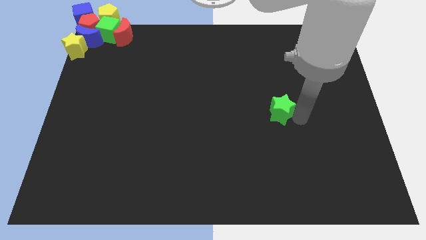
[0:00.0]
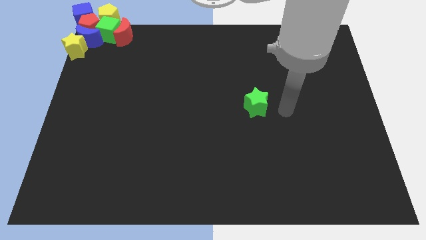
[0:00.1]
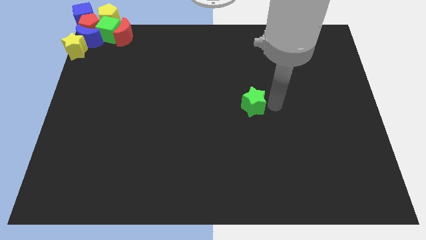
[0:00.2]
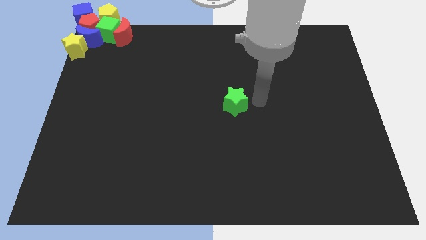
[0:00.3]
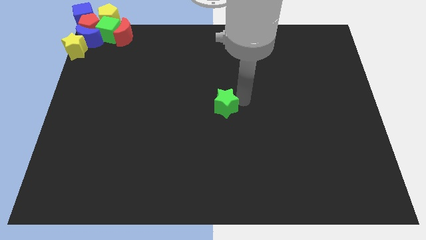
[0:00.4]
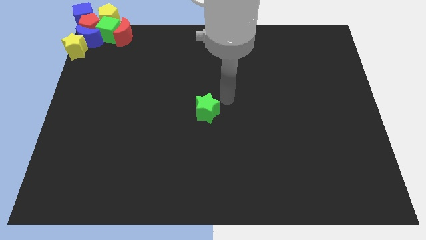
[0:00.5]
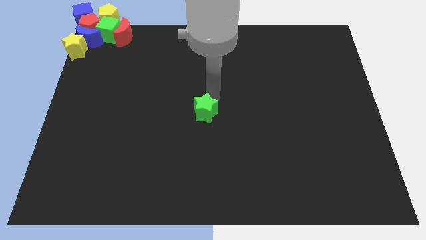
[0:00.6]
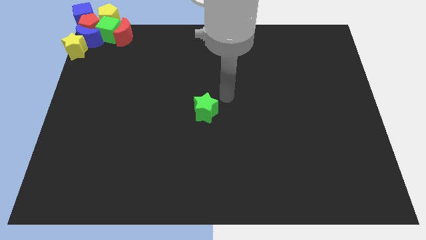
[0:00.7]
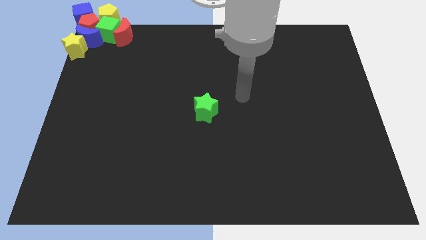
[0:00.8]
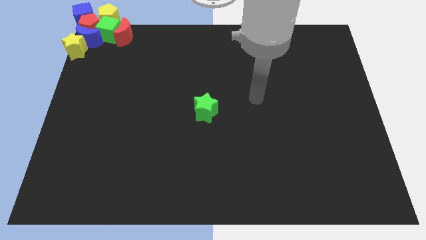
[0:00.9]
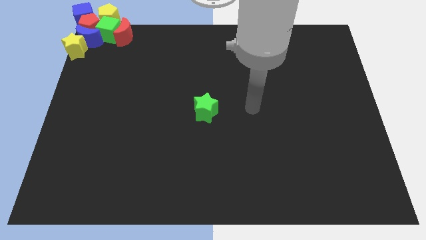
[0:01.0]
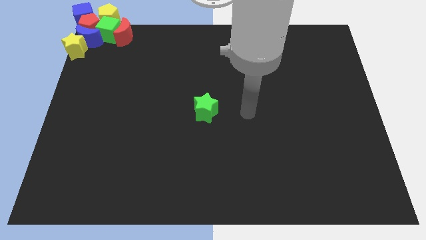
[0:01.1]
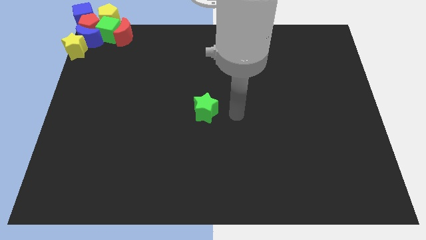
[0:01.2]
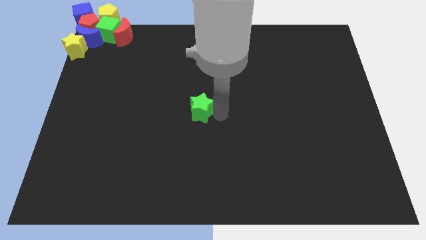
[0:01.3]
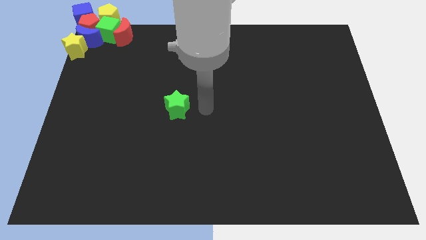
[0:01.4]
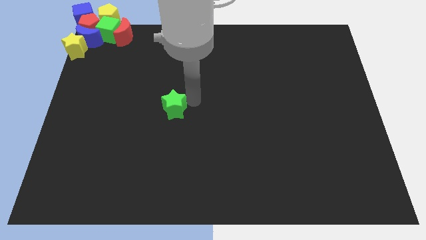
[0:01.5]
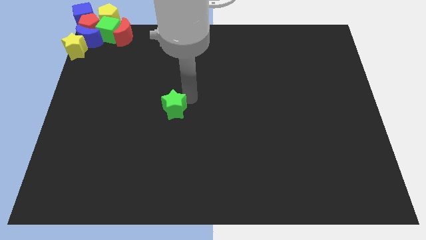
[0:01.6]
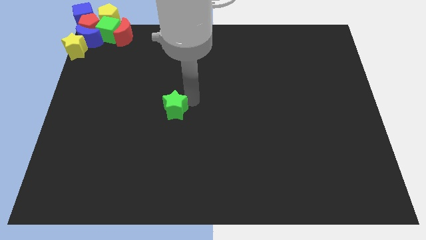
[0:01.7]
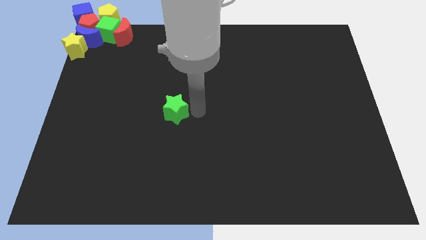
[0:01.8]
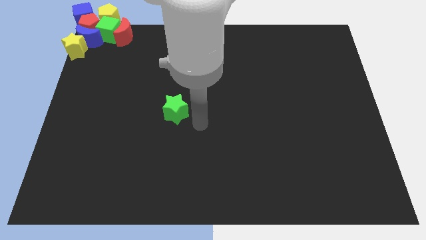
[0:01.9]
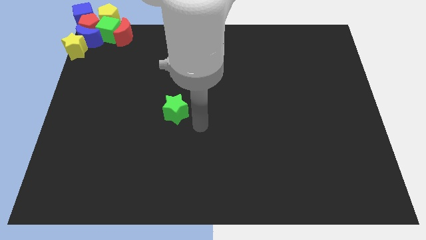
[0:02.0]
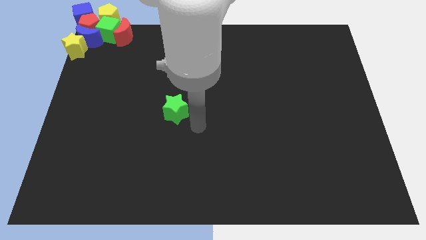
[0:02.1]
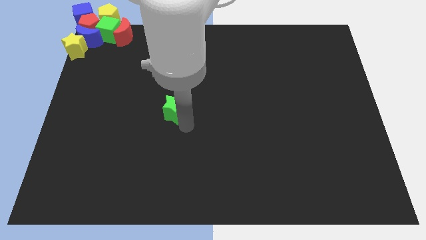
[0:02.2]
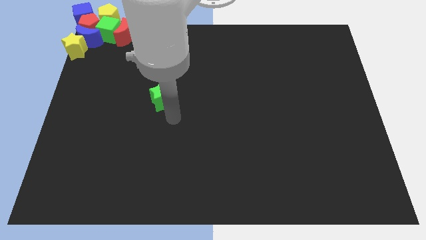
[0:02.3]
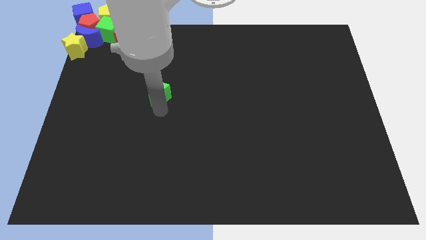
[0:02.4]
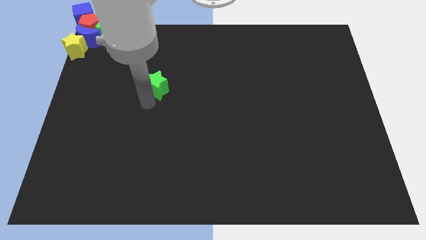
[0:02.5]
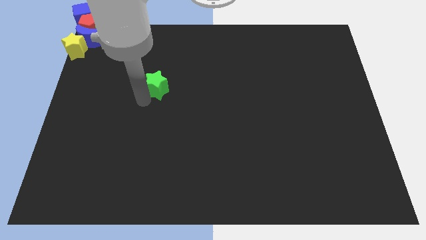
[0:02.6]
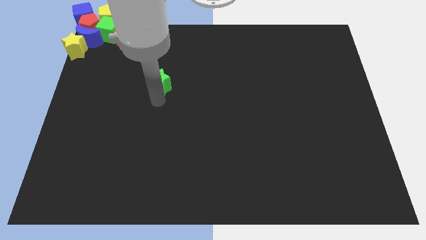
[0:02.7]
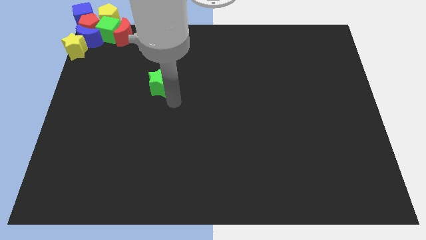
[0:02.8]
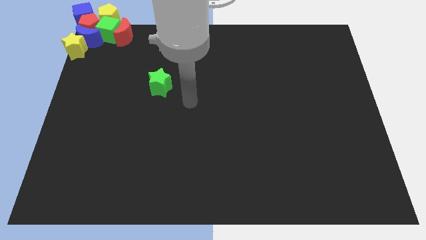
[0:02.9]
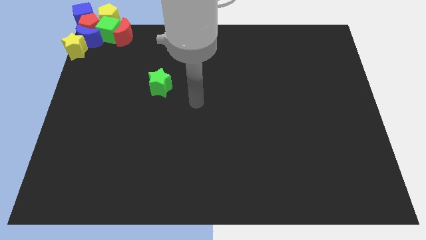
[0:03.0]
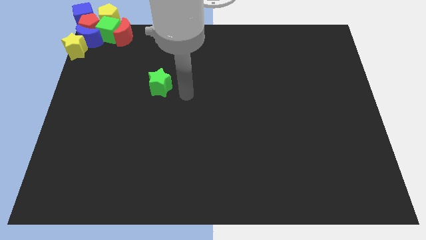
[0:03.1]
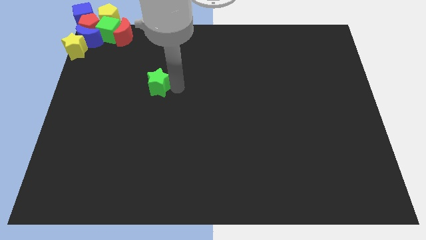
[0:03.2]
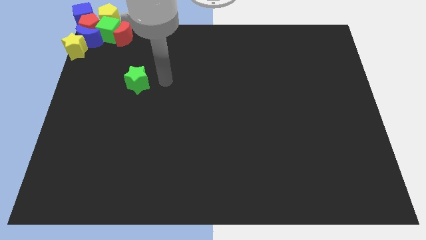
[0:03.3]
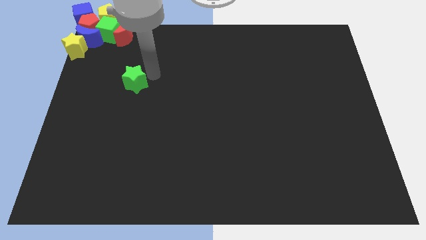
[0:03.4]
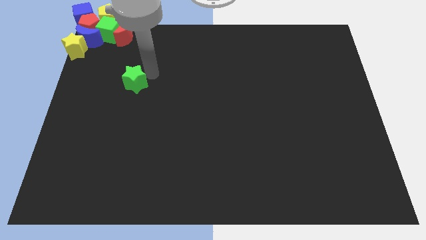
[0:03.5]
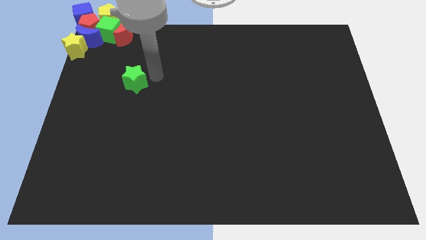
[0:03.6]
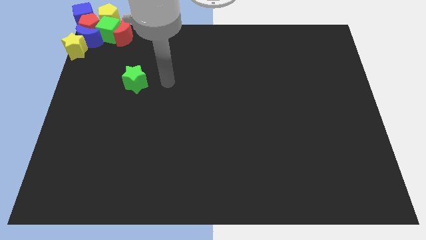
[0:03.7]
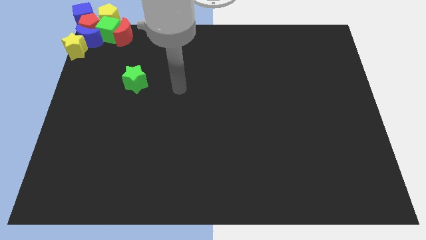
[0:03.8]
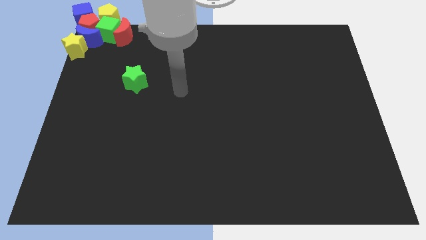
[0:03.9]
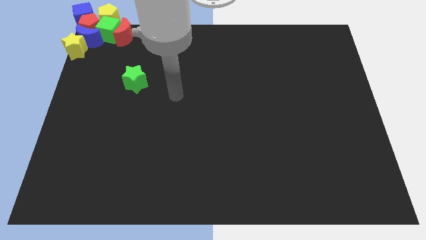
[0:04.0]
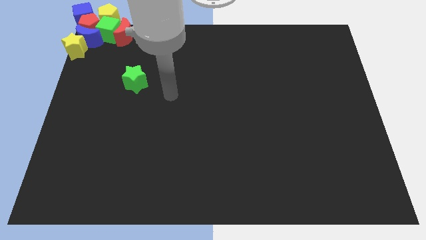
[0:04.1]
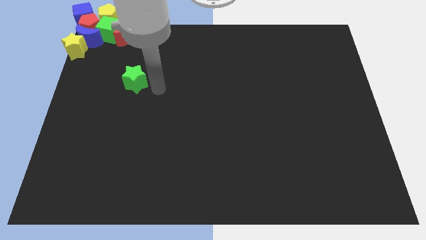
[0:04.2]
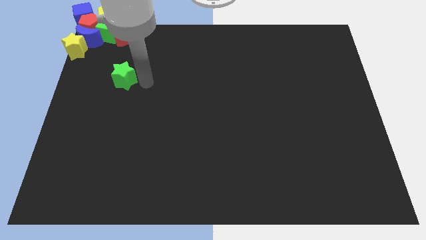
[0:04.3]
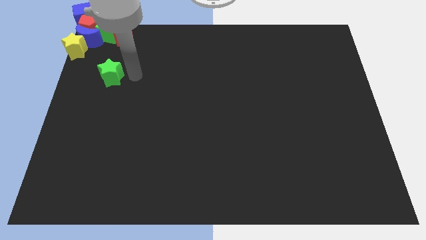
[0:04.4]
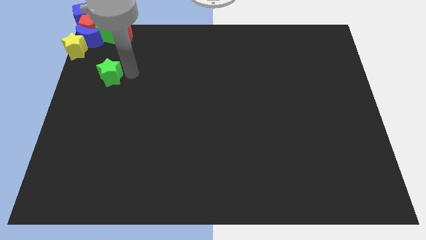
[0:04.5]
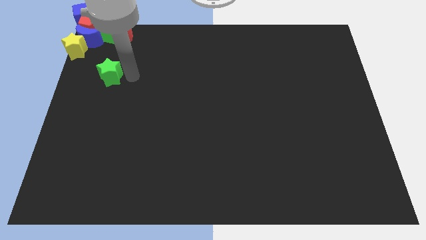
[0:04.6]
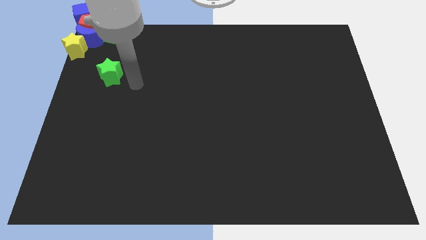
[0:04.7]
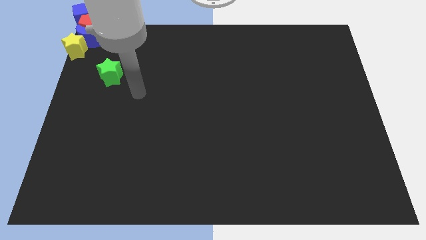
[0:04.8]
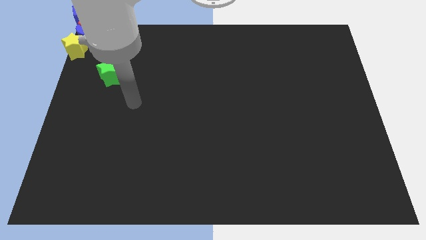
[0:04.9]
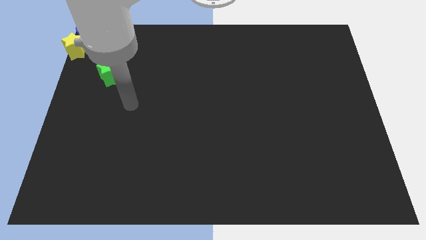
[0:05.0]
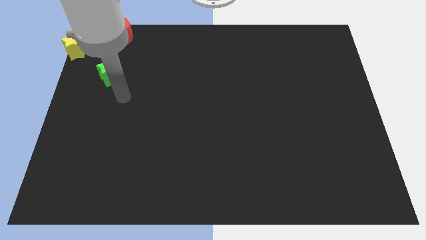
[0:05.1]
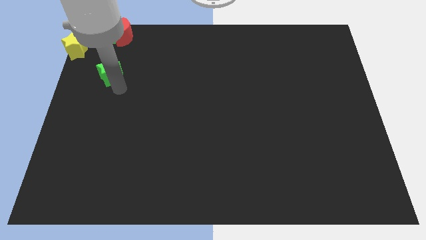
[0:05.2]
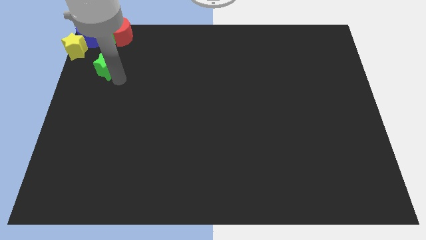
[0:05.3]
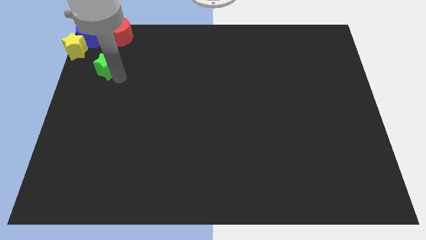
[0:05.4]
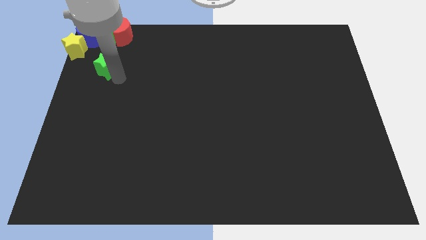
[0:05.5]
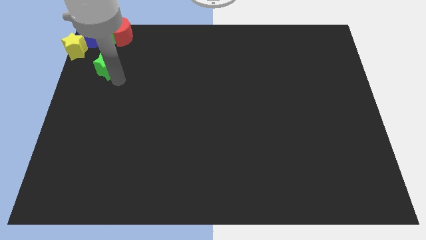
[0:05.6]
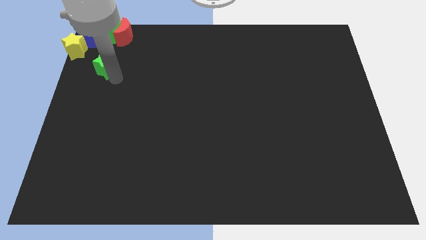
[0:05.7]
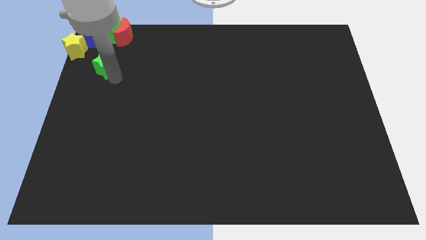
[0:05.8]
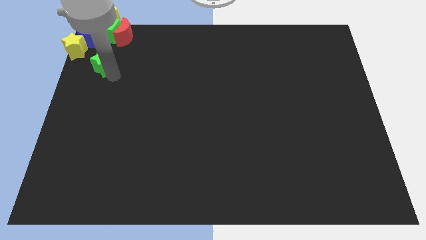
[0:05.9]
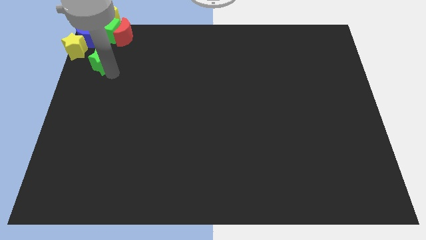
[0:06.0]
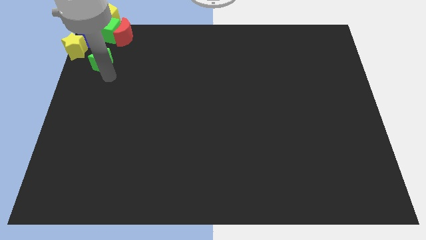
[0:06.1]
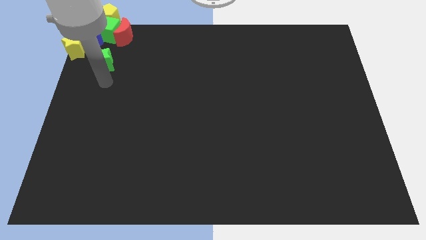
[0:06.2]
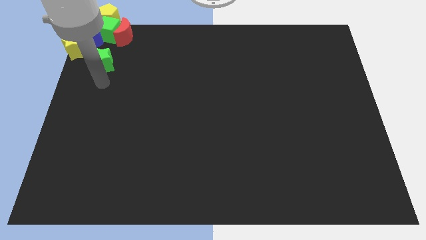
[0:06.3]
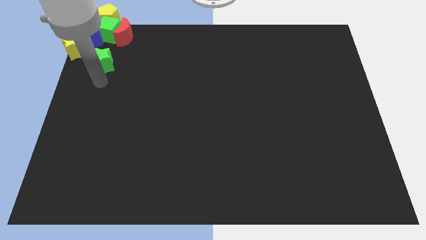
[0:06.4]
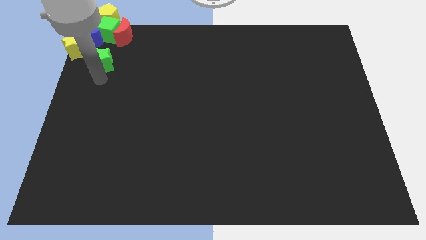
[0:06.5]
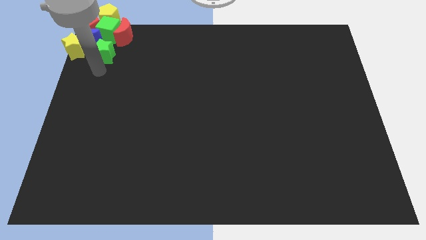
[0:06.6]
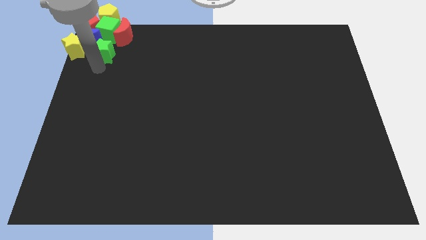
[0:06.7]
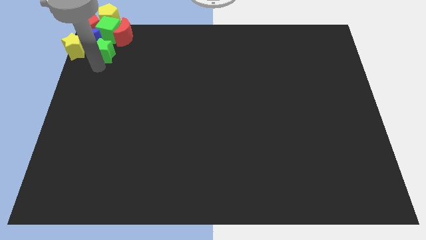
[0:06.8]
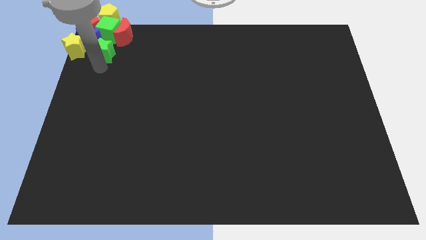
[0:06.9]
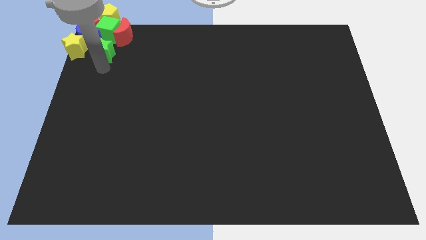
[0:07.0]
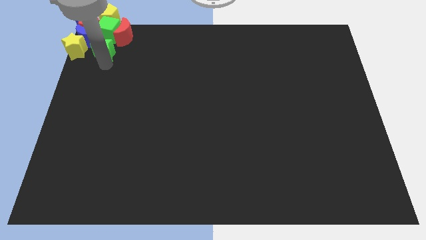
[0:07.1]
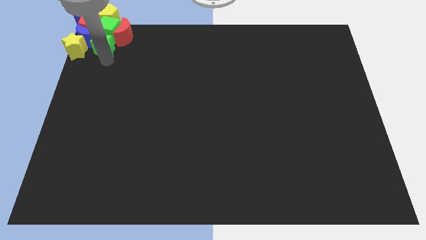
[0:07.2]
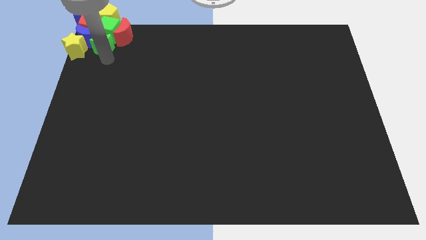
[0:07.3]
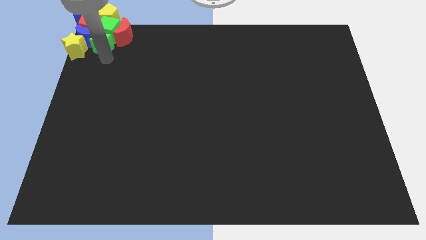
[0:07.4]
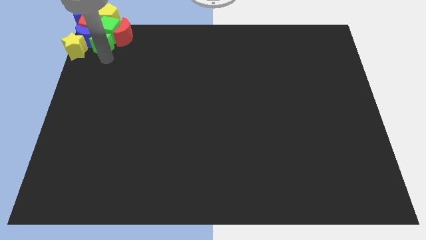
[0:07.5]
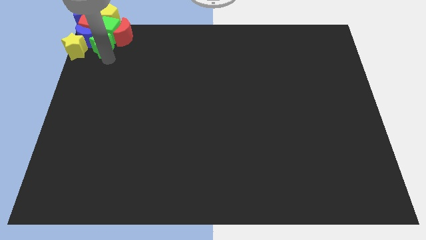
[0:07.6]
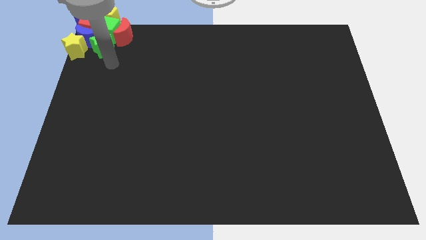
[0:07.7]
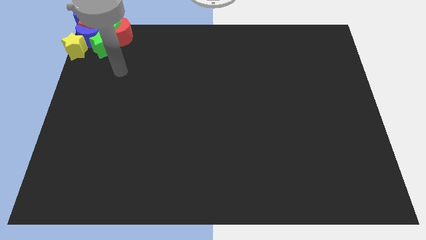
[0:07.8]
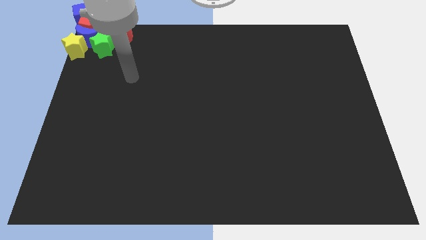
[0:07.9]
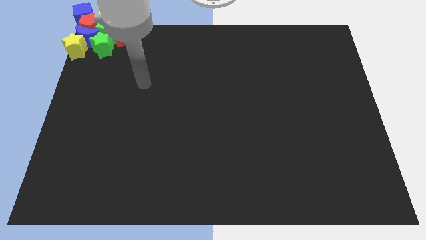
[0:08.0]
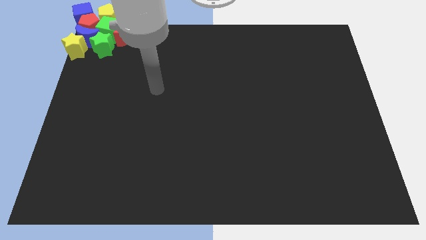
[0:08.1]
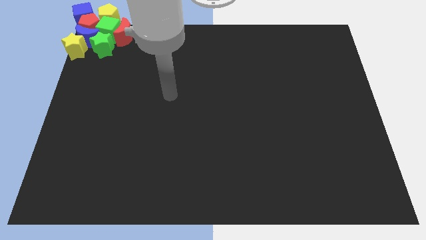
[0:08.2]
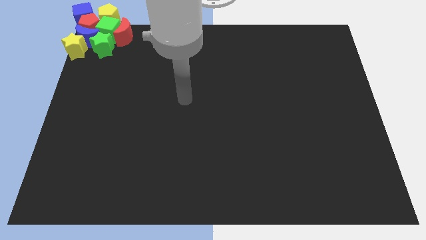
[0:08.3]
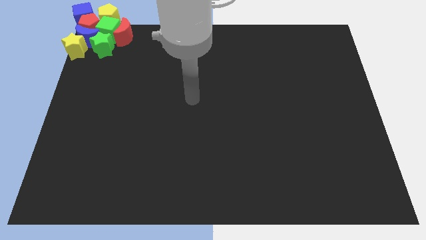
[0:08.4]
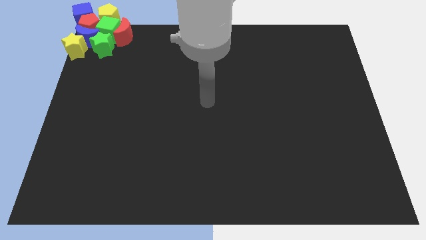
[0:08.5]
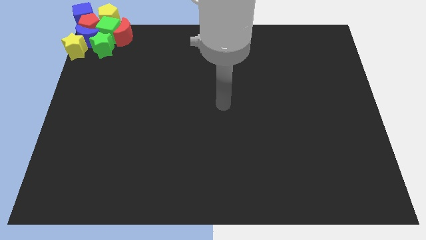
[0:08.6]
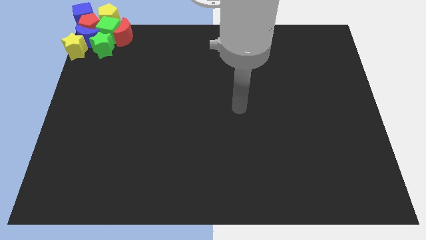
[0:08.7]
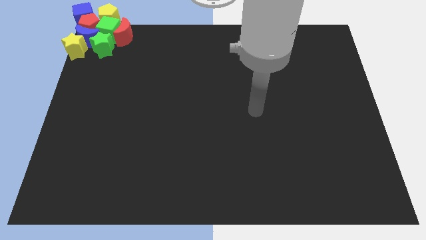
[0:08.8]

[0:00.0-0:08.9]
move the green star in between the yellow star and red crescent

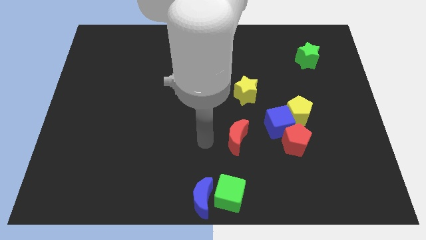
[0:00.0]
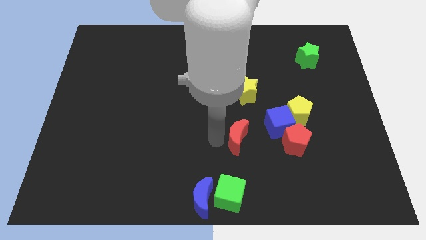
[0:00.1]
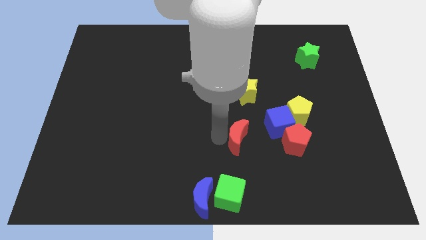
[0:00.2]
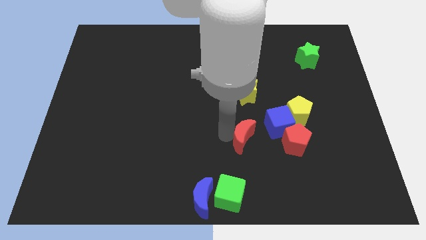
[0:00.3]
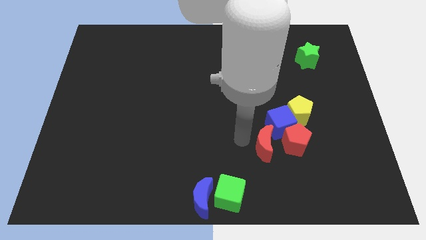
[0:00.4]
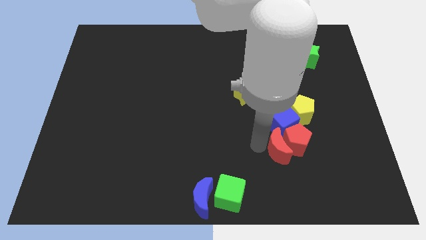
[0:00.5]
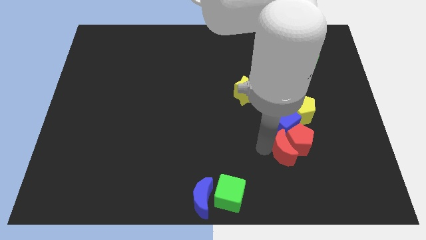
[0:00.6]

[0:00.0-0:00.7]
place red crescent on the left side of the red pentagon
